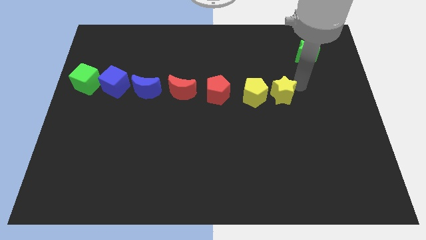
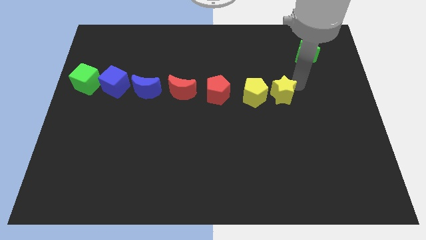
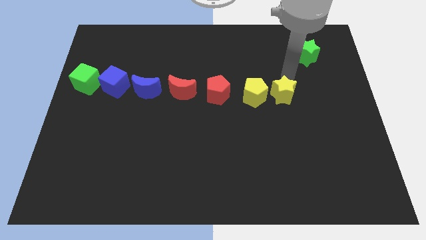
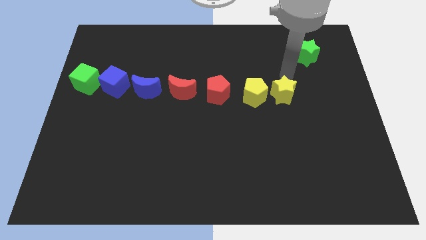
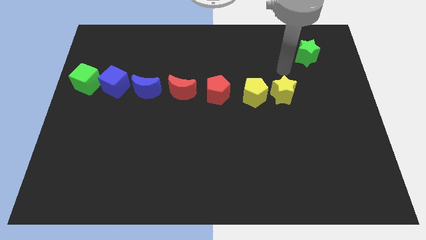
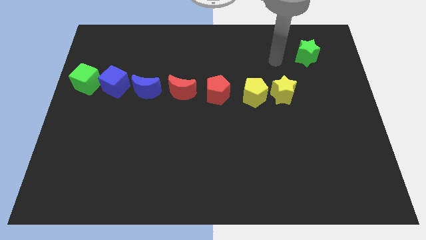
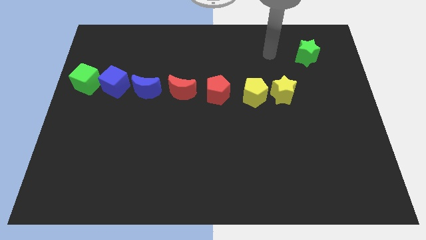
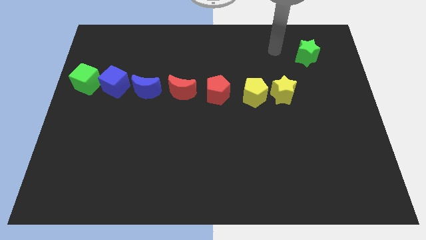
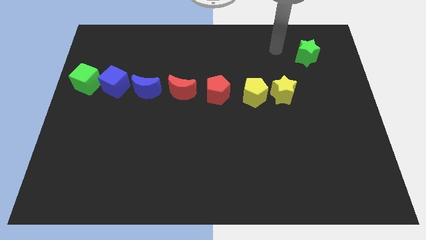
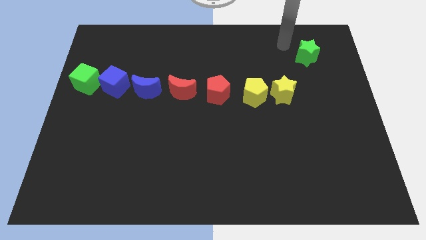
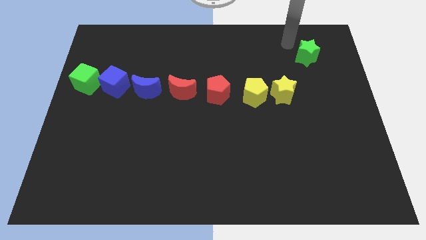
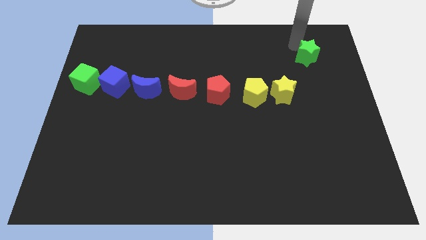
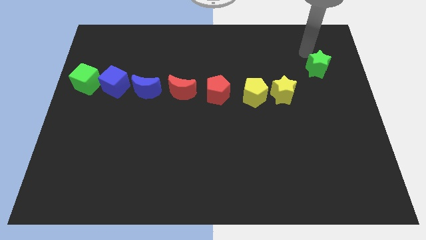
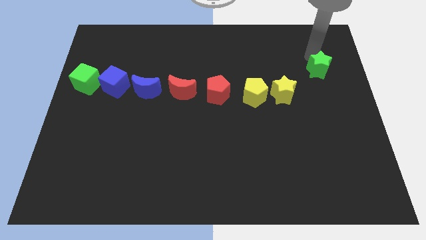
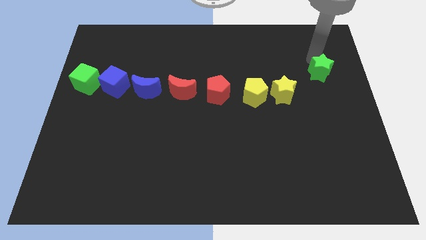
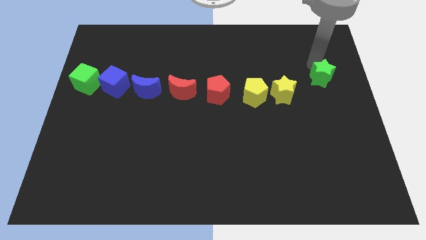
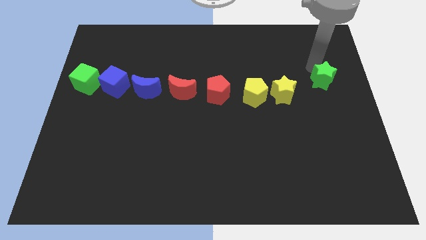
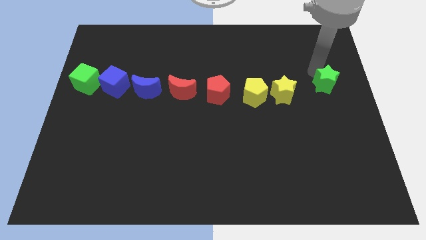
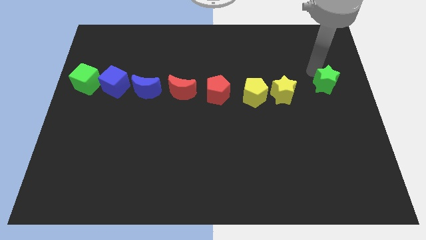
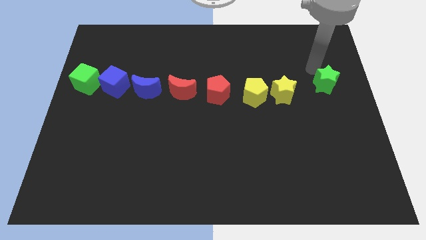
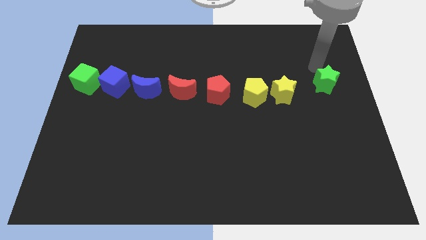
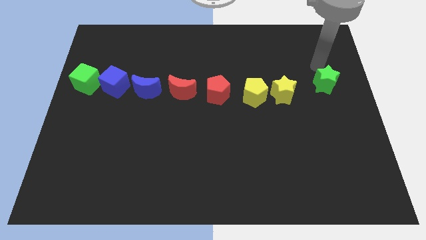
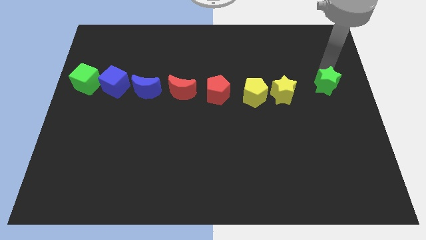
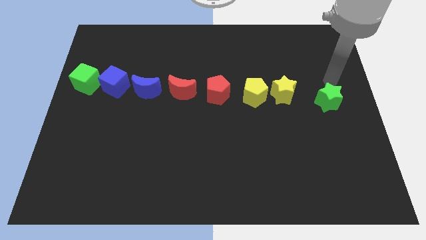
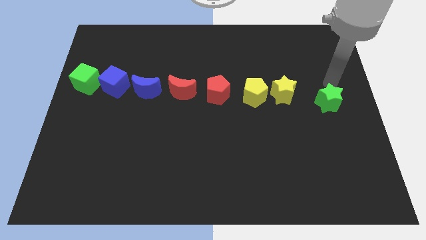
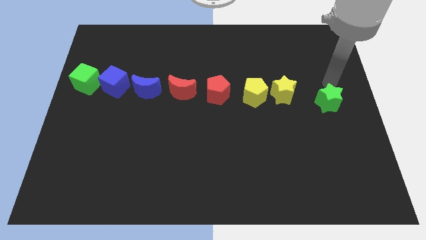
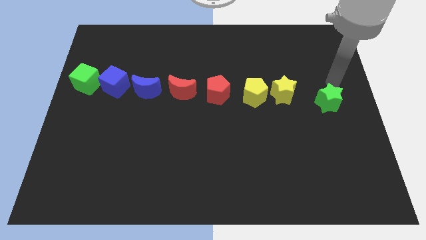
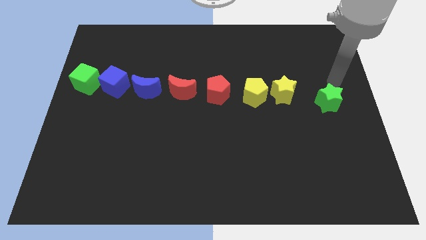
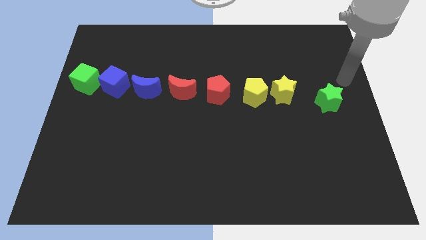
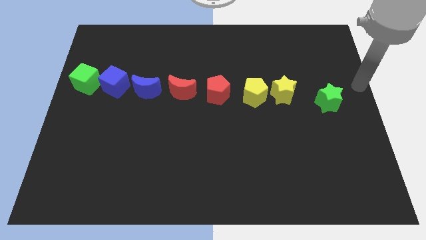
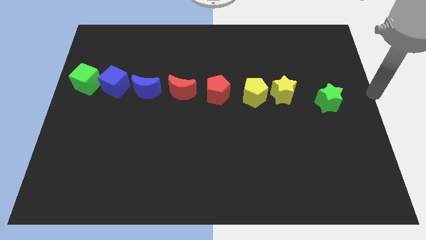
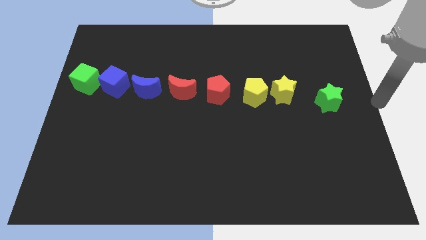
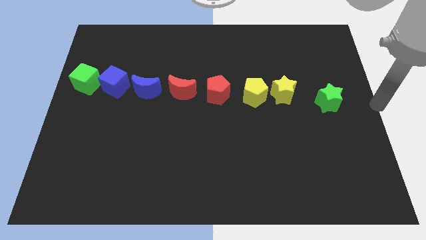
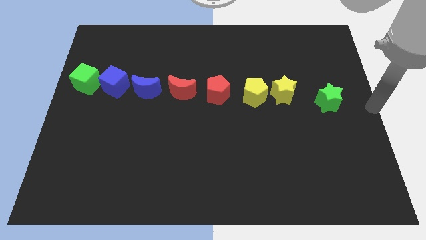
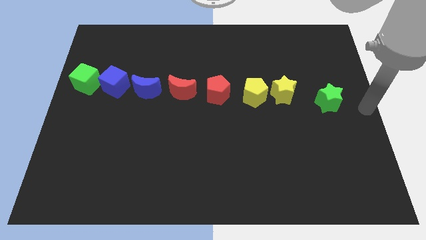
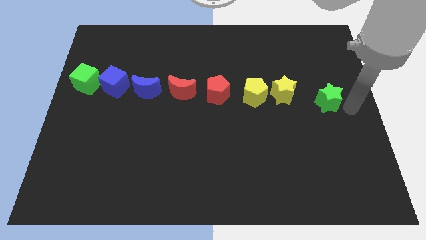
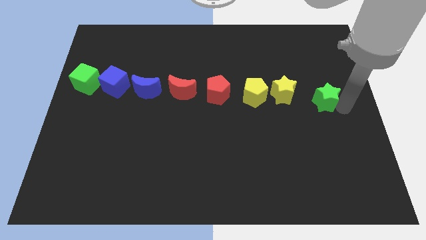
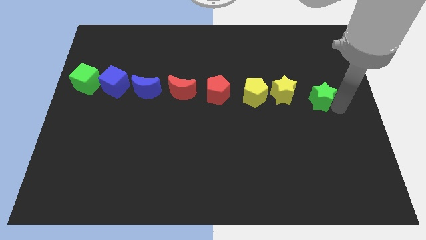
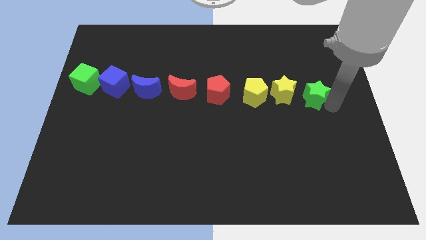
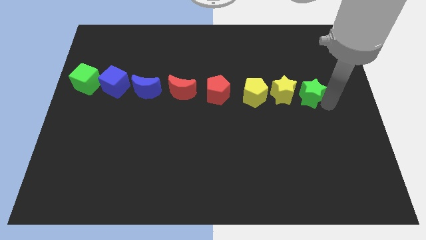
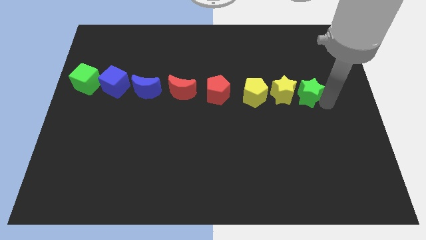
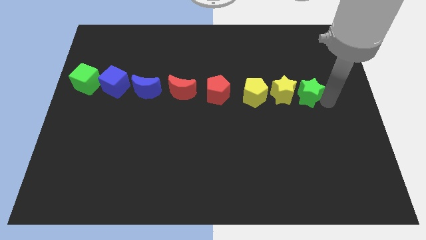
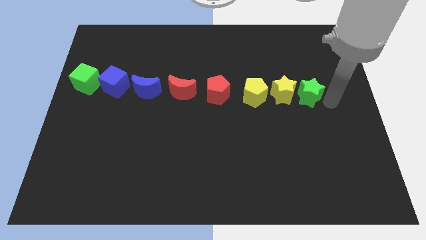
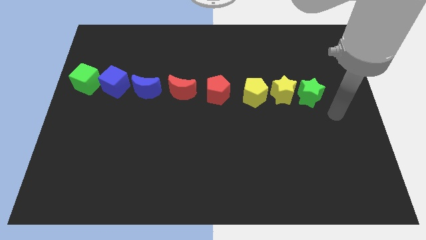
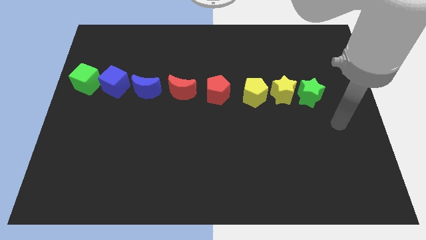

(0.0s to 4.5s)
push the green star close to the right side of the yellow star

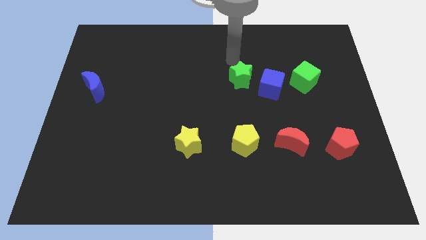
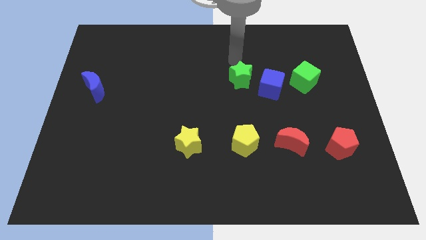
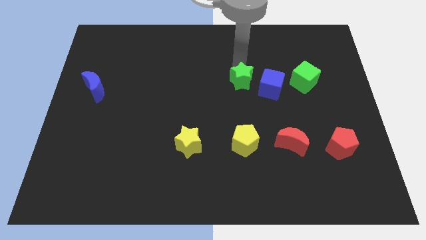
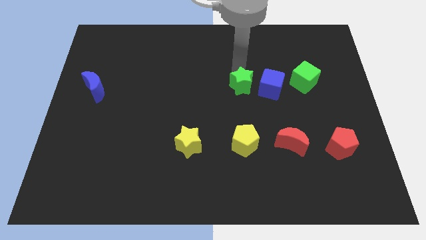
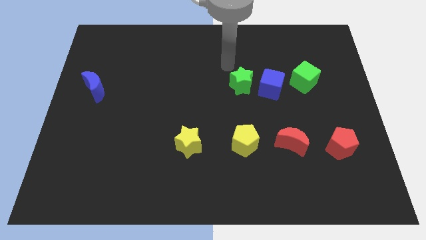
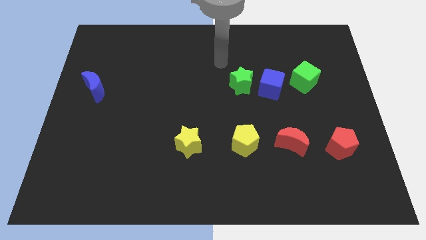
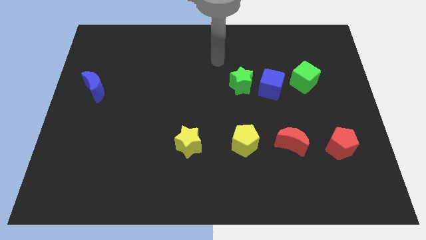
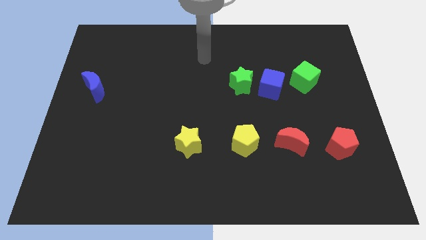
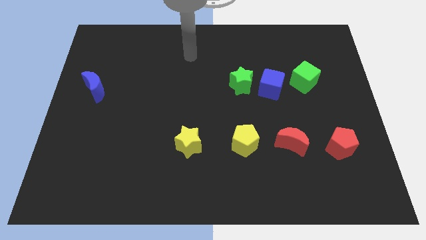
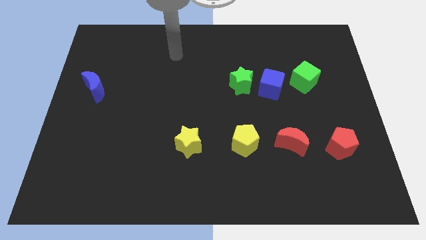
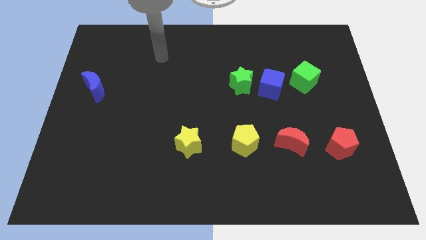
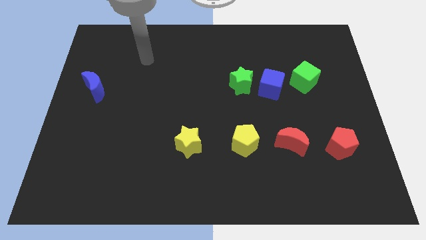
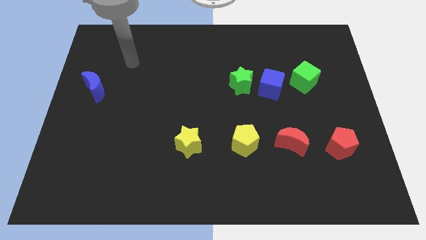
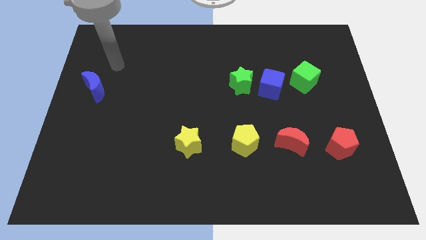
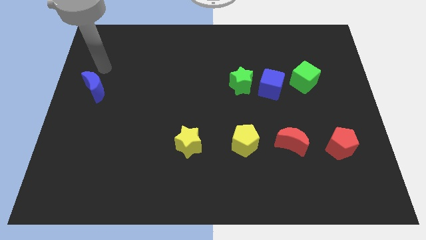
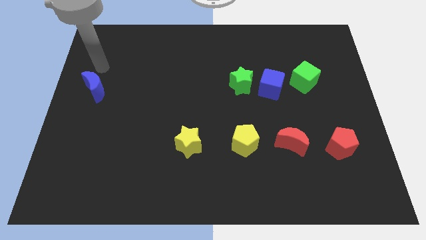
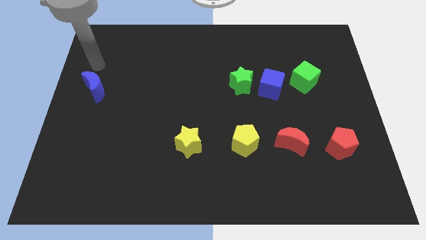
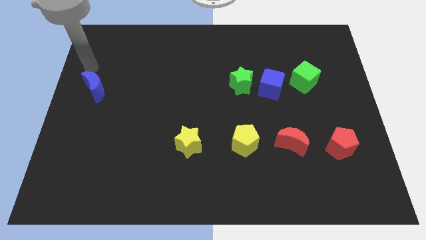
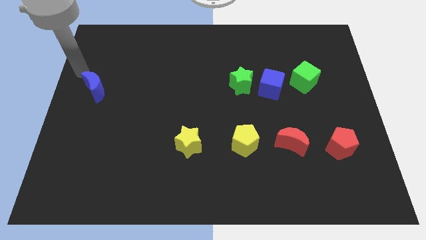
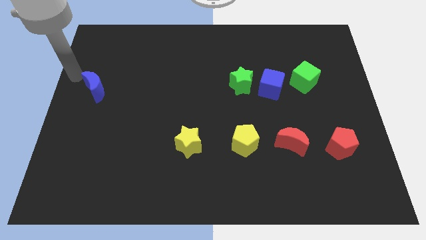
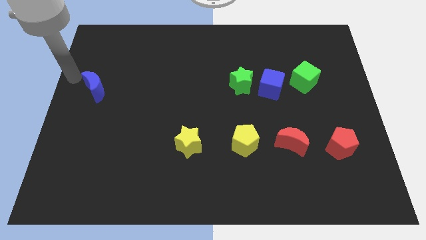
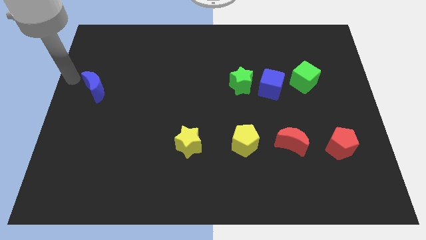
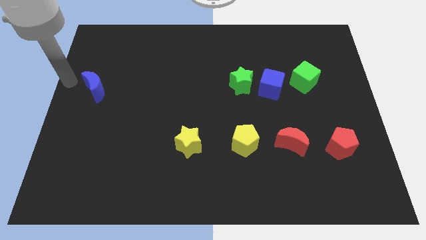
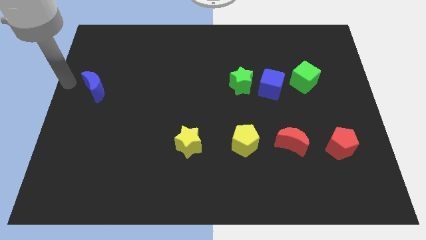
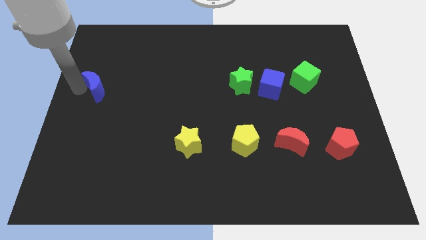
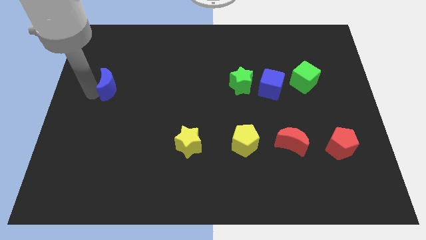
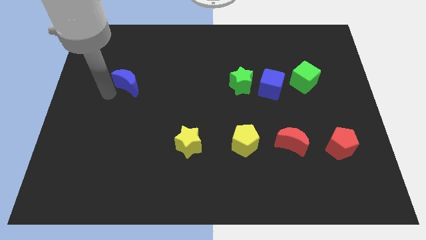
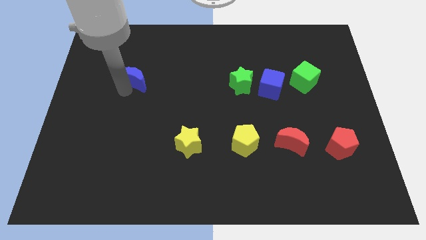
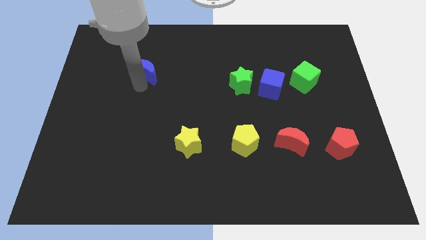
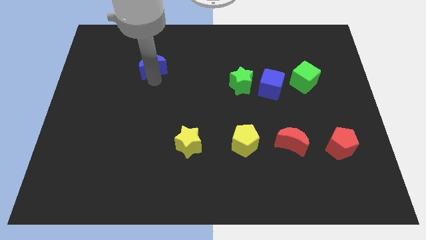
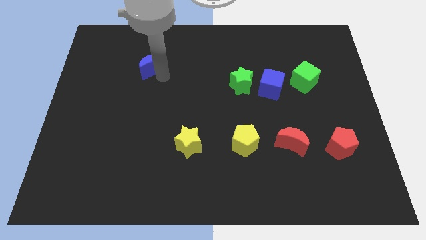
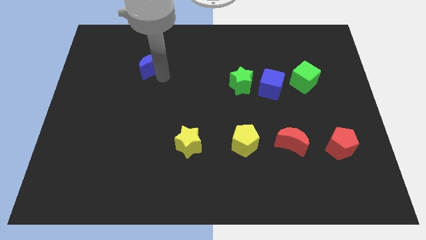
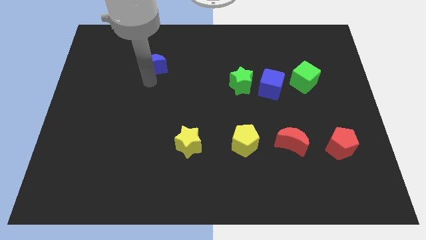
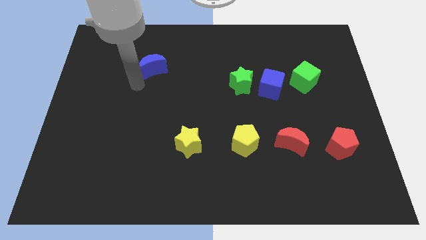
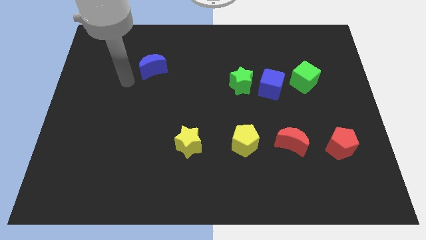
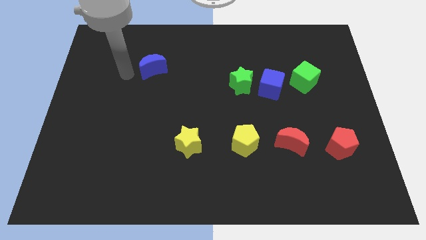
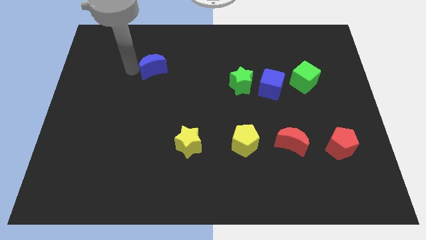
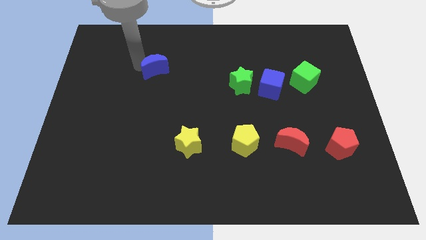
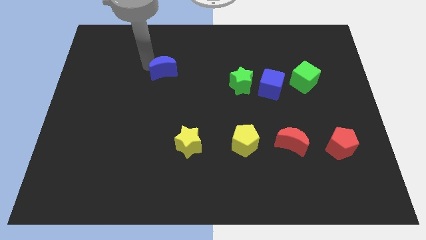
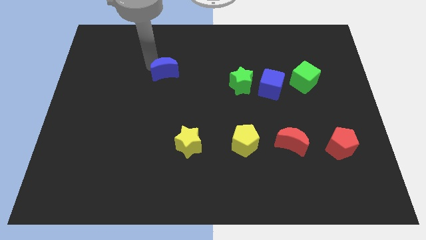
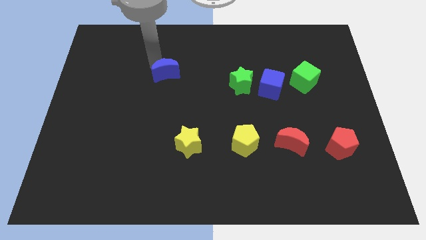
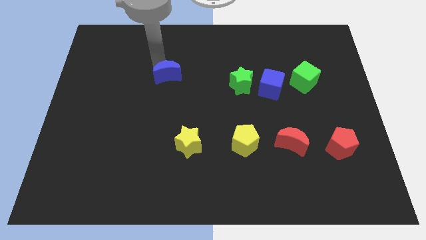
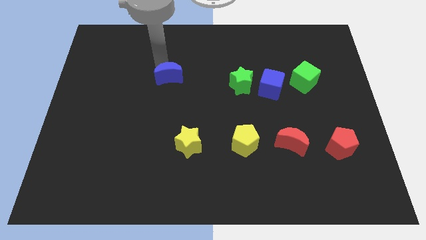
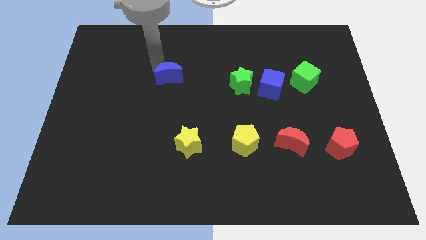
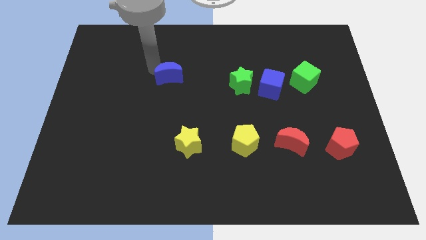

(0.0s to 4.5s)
slide the blue moon towards the green star

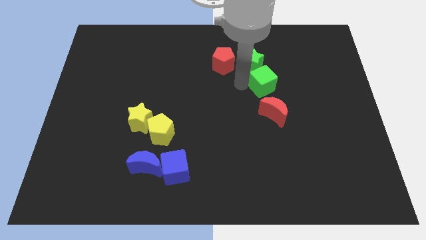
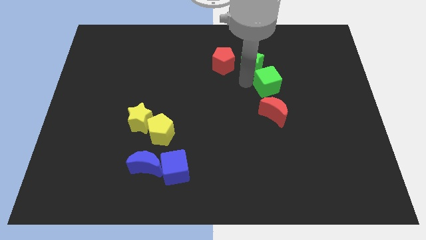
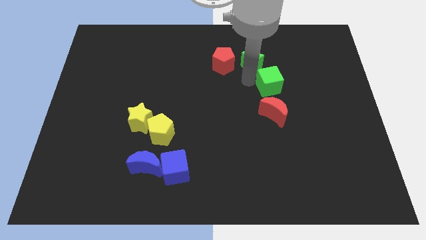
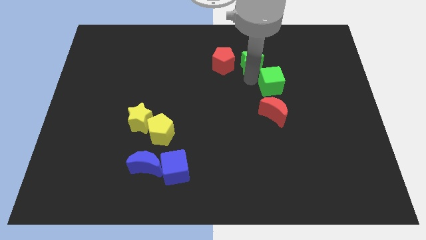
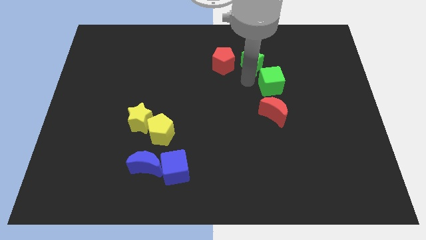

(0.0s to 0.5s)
move the green cube above the red crescent
